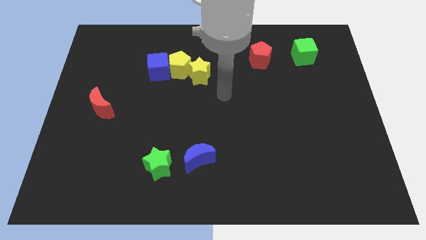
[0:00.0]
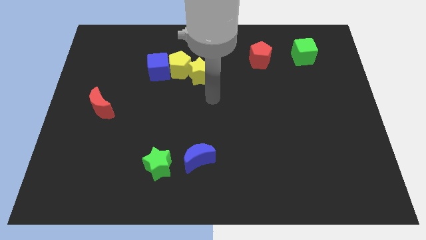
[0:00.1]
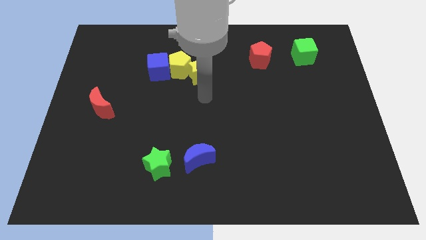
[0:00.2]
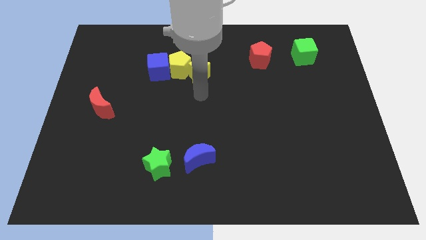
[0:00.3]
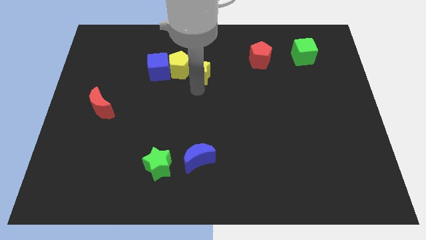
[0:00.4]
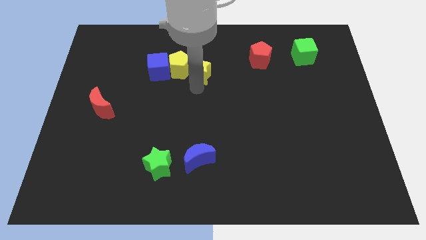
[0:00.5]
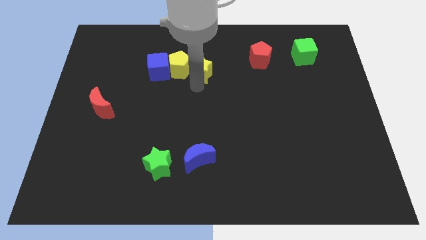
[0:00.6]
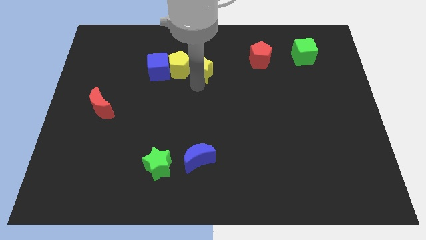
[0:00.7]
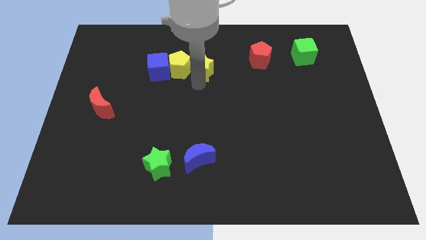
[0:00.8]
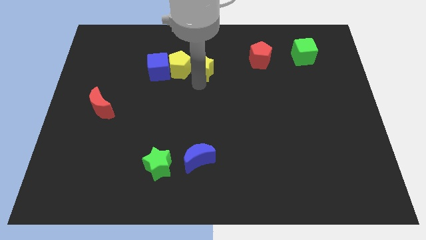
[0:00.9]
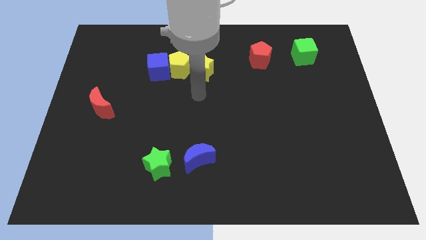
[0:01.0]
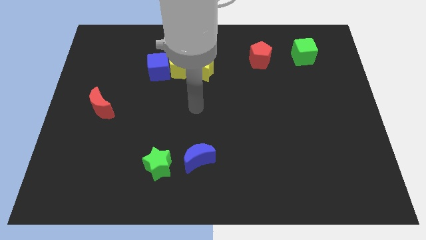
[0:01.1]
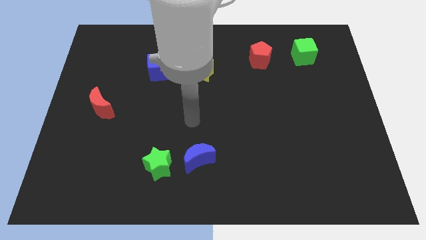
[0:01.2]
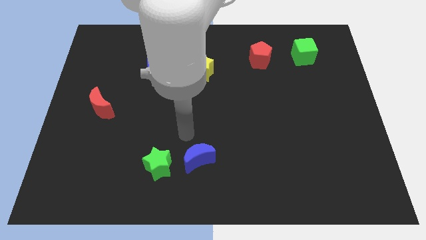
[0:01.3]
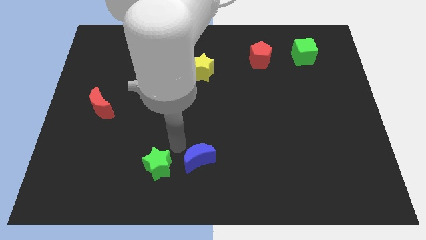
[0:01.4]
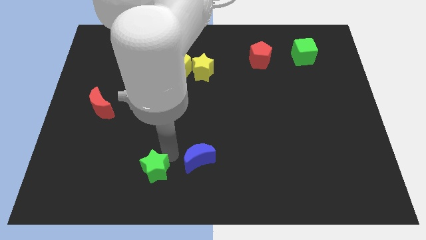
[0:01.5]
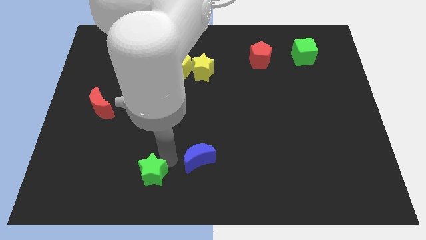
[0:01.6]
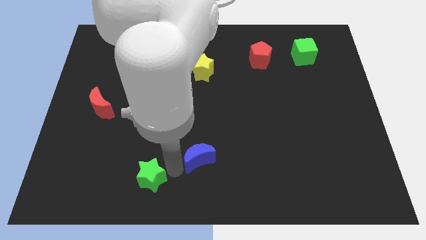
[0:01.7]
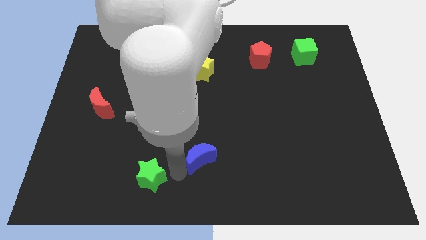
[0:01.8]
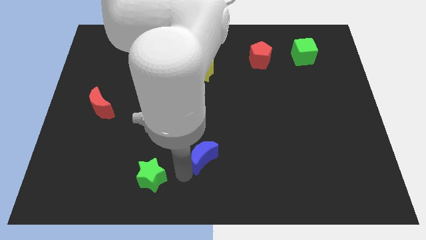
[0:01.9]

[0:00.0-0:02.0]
move your arm towards the green star

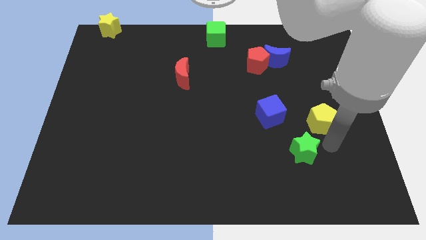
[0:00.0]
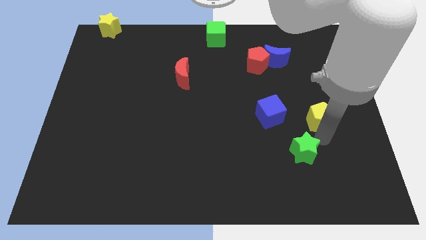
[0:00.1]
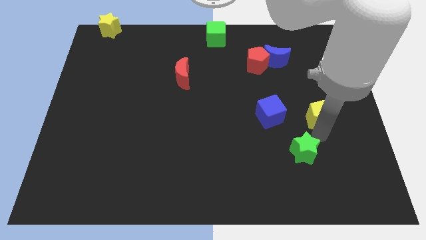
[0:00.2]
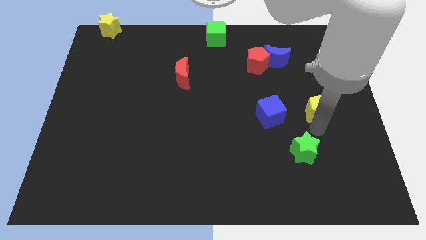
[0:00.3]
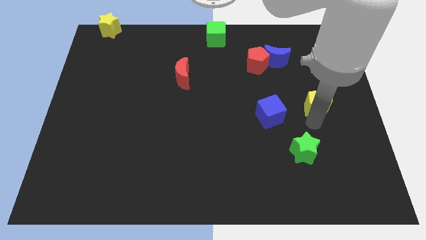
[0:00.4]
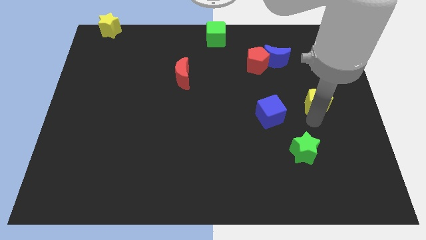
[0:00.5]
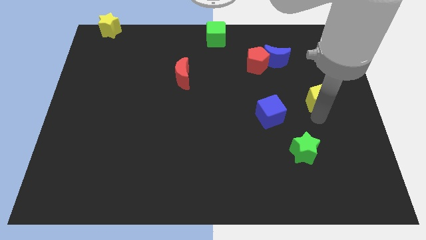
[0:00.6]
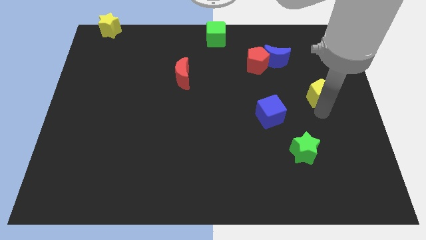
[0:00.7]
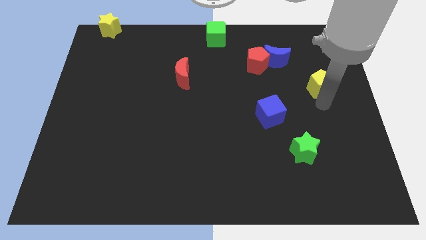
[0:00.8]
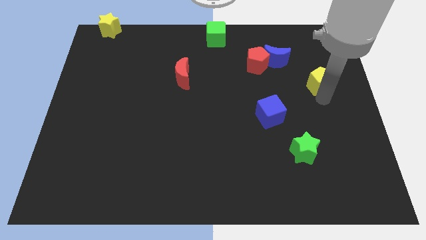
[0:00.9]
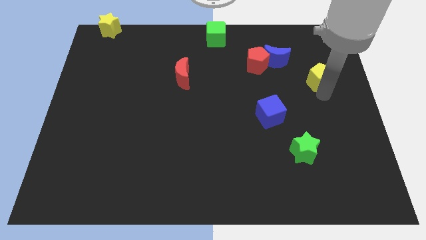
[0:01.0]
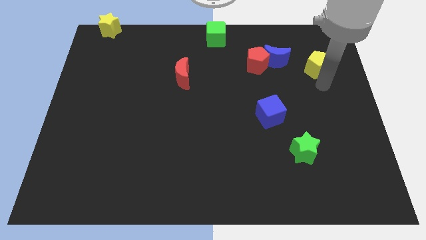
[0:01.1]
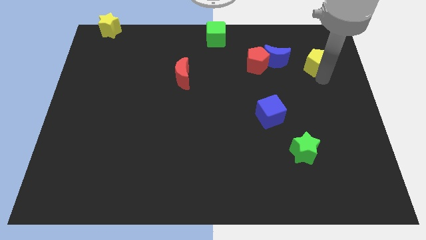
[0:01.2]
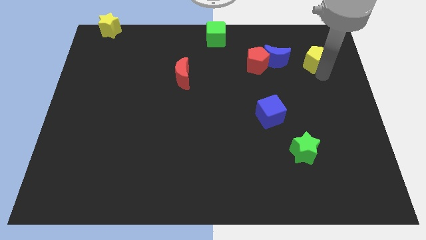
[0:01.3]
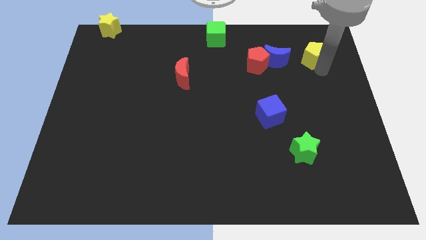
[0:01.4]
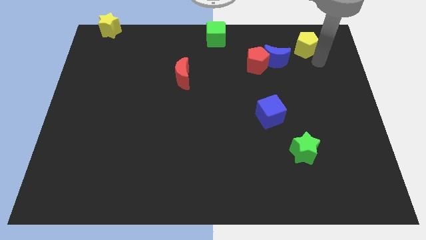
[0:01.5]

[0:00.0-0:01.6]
place the yellow pentagon to the right of the blue moon

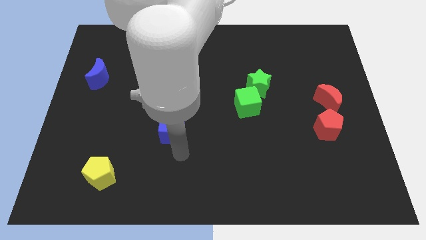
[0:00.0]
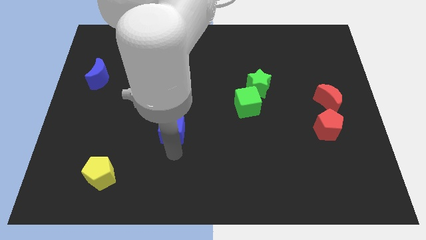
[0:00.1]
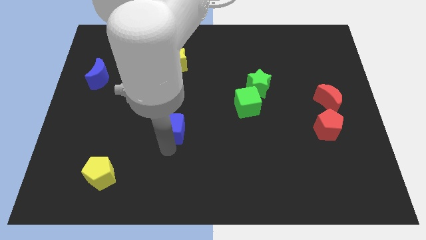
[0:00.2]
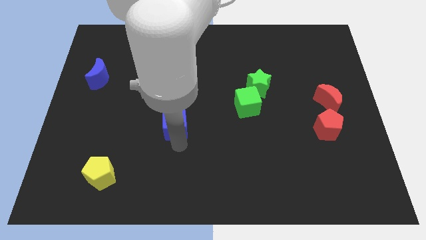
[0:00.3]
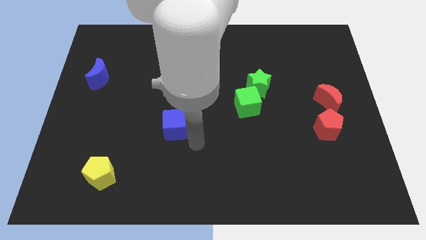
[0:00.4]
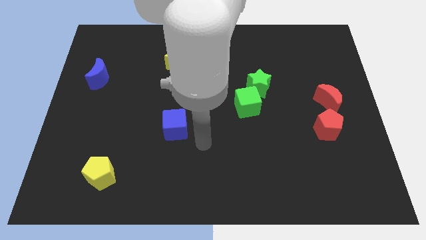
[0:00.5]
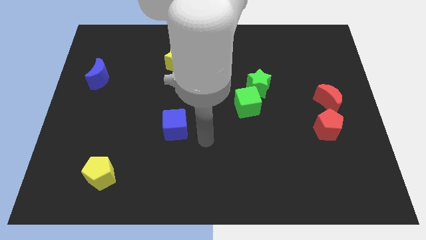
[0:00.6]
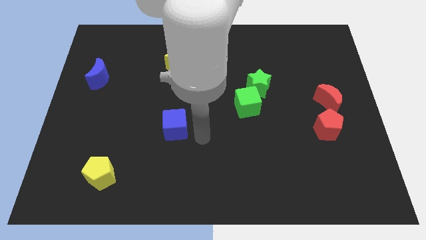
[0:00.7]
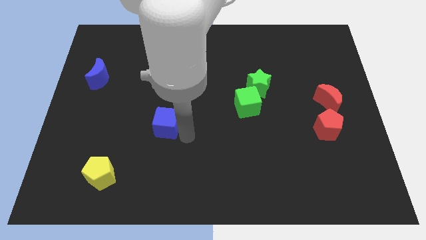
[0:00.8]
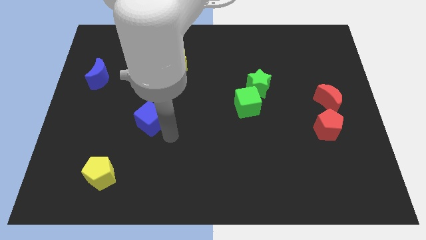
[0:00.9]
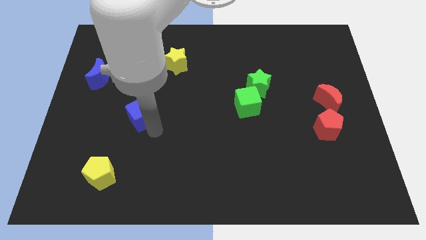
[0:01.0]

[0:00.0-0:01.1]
push blue block towards blue crescent

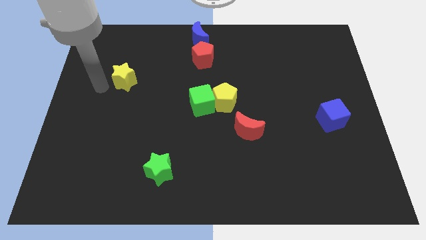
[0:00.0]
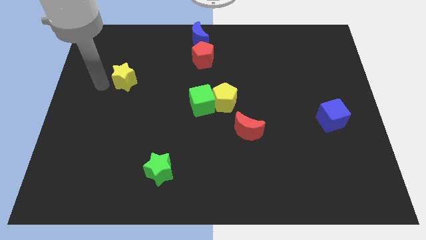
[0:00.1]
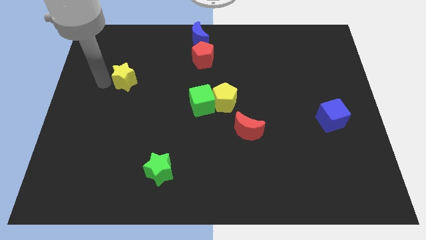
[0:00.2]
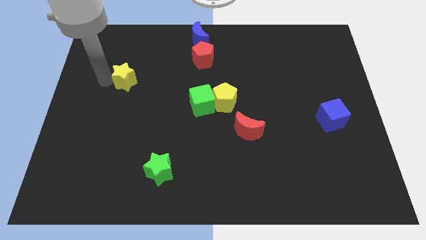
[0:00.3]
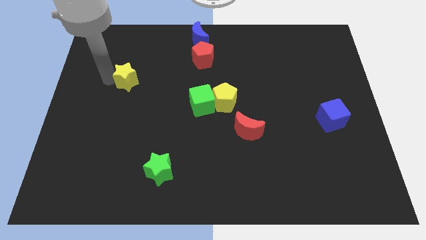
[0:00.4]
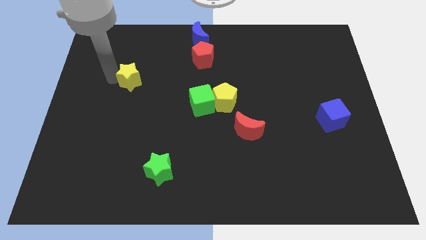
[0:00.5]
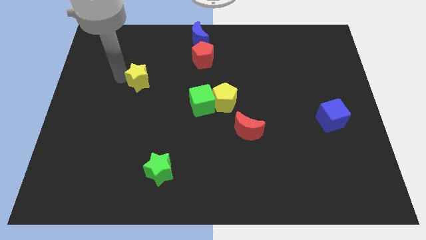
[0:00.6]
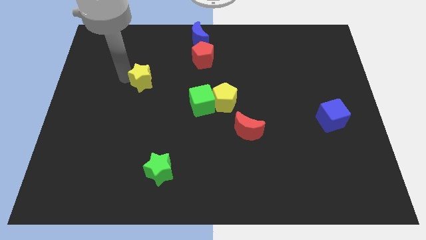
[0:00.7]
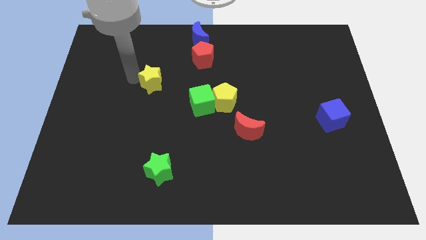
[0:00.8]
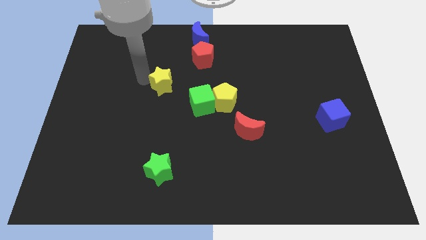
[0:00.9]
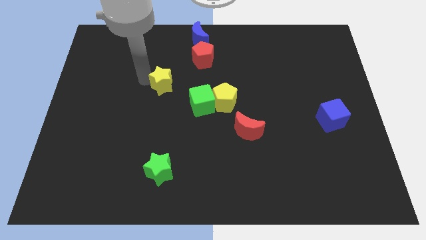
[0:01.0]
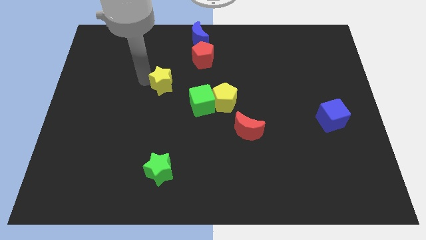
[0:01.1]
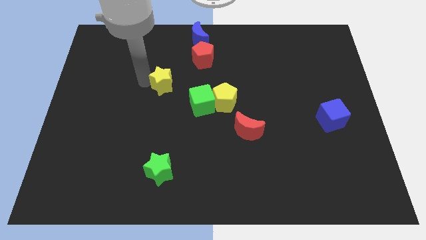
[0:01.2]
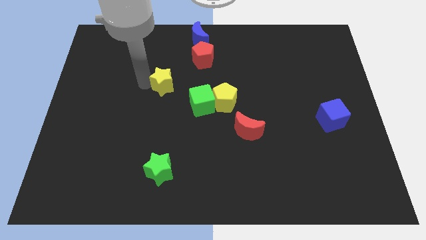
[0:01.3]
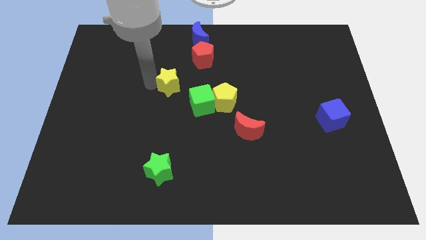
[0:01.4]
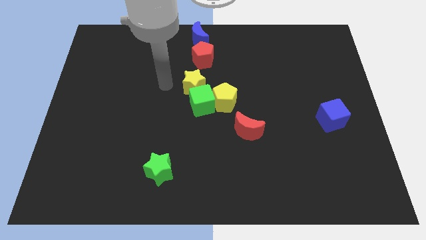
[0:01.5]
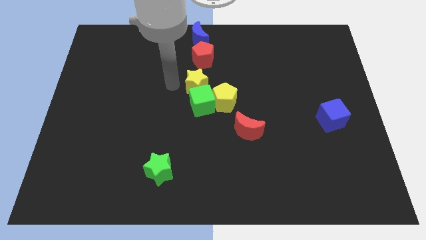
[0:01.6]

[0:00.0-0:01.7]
push the yellow star towards the center

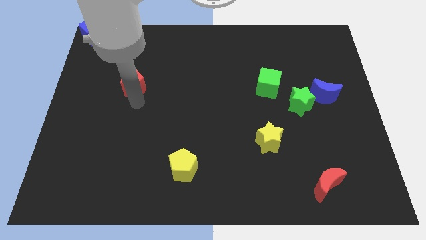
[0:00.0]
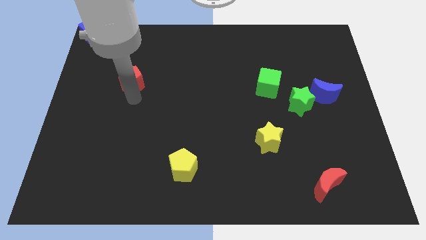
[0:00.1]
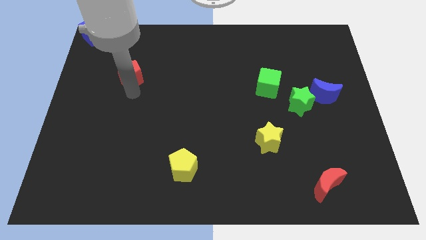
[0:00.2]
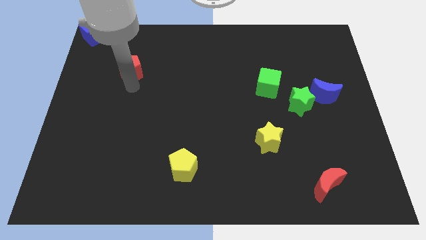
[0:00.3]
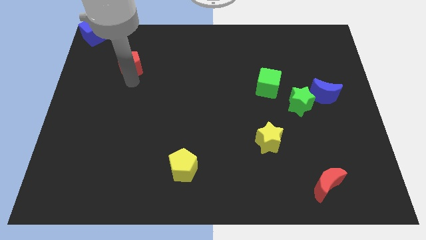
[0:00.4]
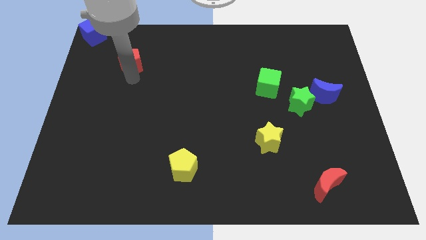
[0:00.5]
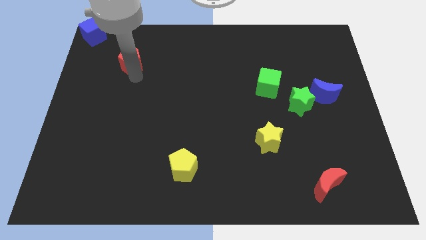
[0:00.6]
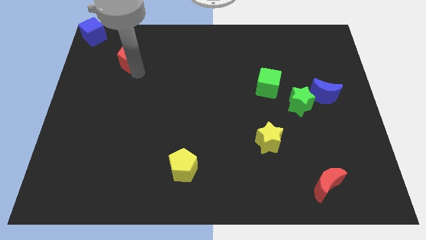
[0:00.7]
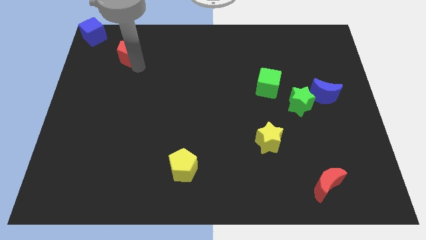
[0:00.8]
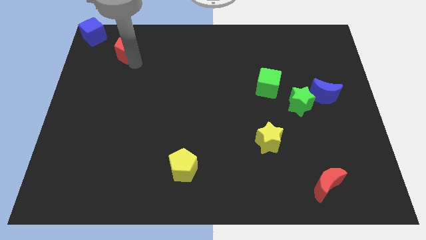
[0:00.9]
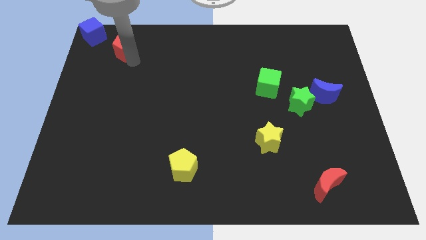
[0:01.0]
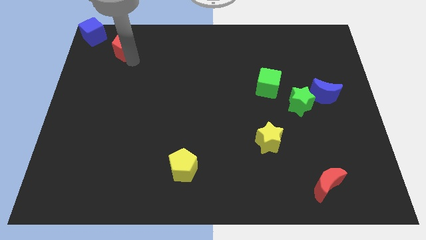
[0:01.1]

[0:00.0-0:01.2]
move the red pentagon near to the blue cube

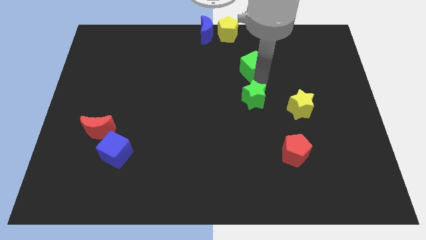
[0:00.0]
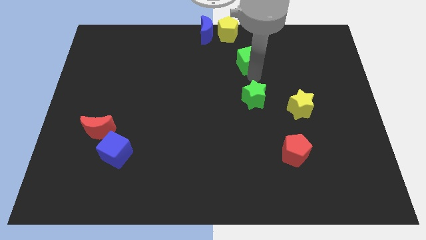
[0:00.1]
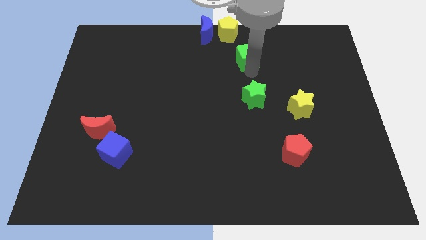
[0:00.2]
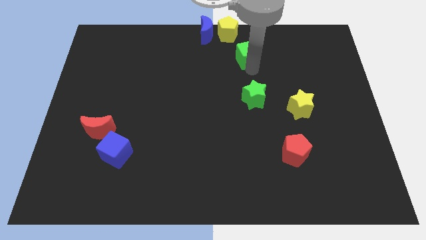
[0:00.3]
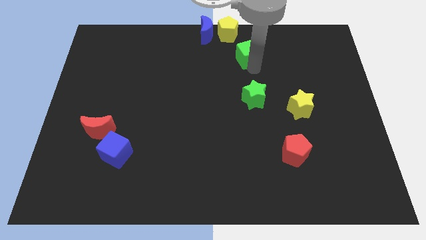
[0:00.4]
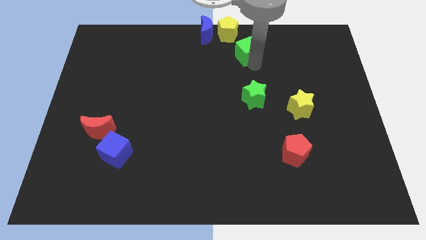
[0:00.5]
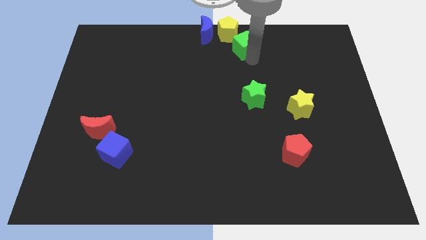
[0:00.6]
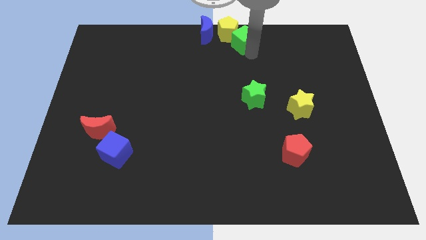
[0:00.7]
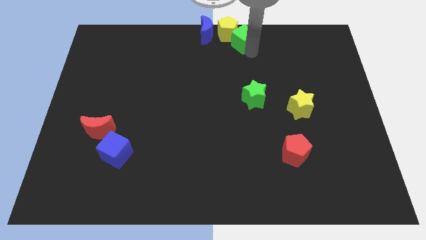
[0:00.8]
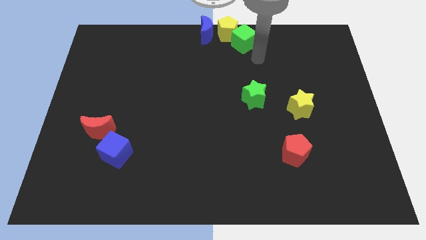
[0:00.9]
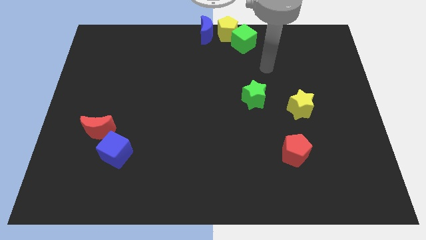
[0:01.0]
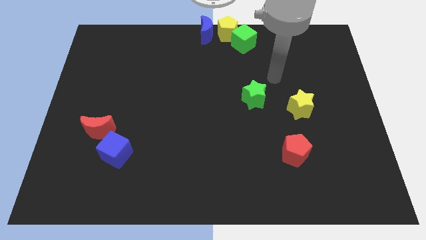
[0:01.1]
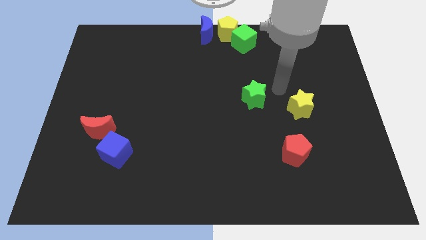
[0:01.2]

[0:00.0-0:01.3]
attach the green cube to the yellow pentagon
